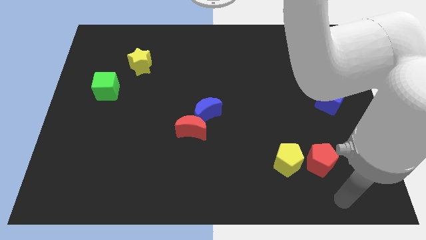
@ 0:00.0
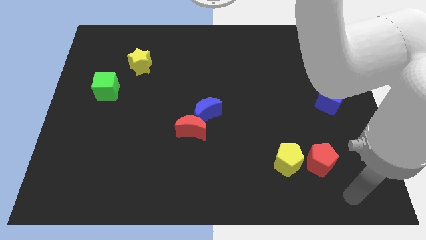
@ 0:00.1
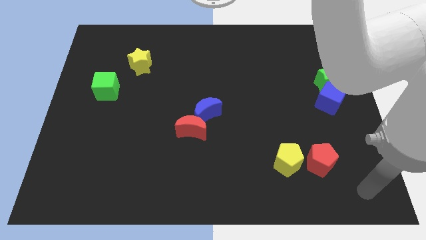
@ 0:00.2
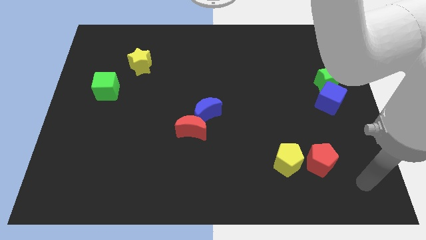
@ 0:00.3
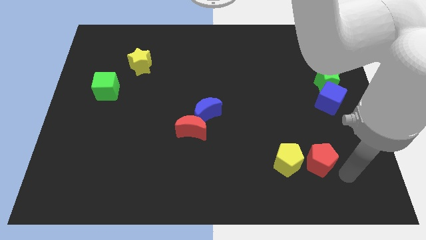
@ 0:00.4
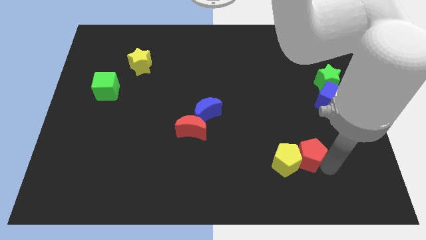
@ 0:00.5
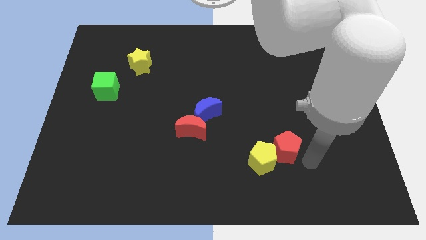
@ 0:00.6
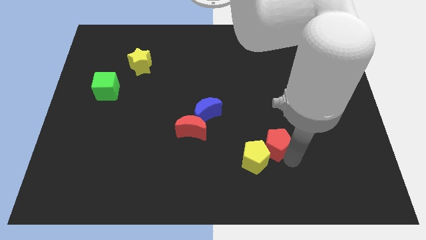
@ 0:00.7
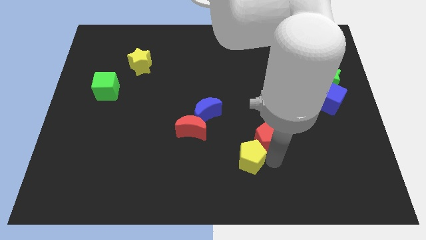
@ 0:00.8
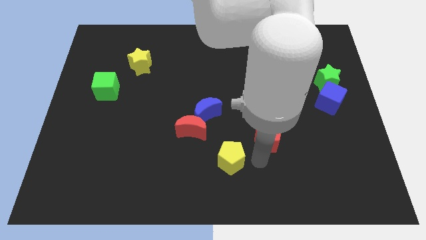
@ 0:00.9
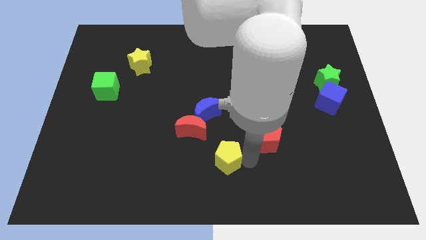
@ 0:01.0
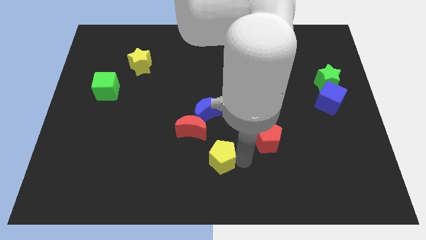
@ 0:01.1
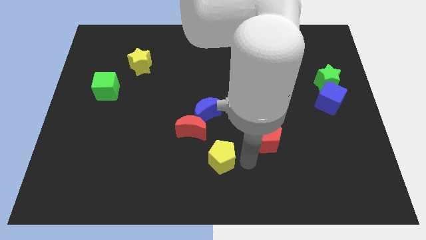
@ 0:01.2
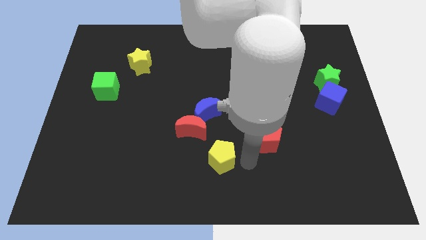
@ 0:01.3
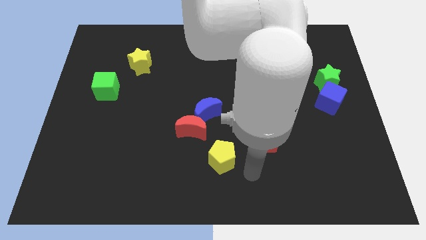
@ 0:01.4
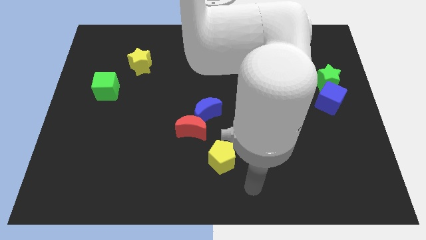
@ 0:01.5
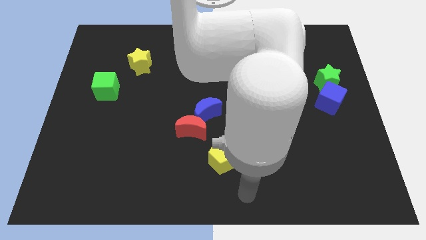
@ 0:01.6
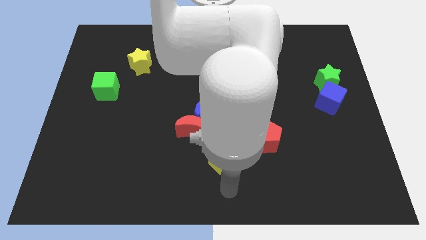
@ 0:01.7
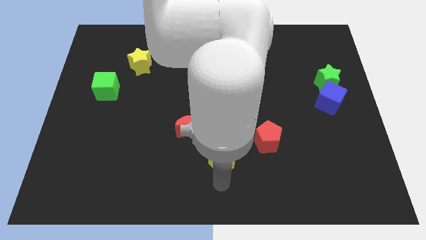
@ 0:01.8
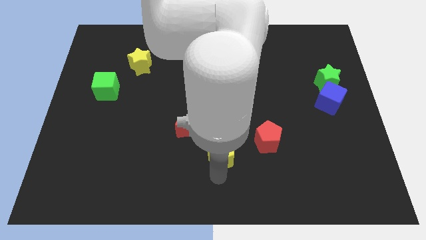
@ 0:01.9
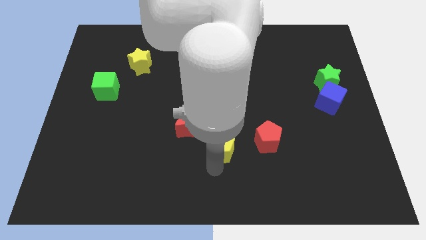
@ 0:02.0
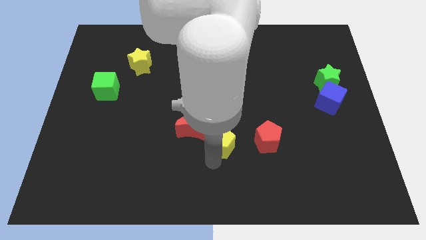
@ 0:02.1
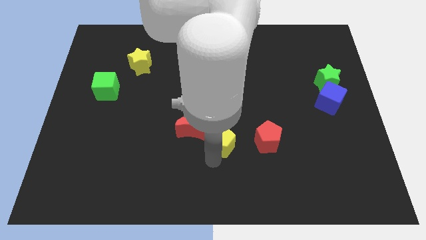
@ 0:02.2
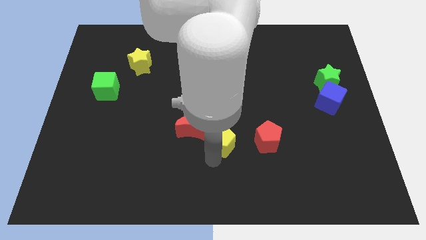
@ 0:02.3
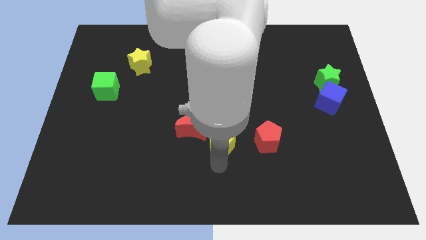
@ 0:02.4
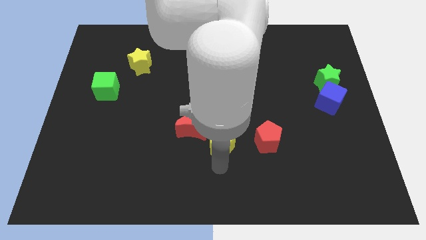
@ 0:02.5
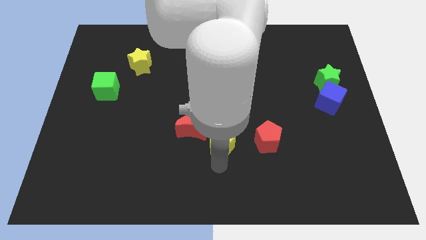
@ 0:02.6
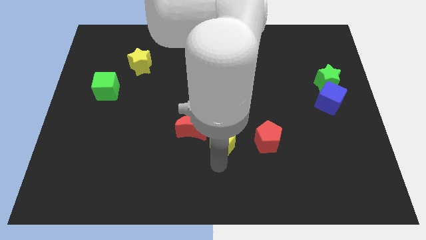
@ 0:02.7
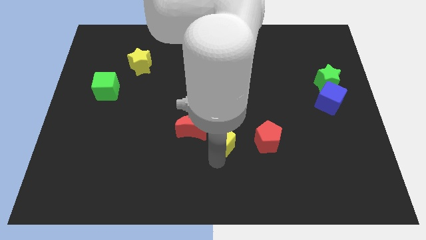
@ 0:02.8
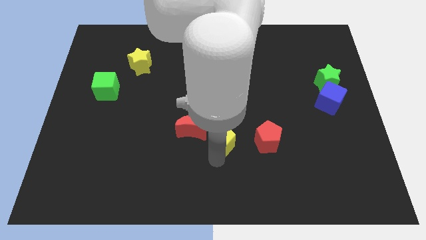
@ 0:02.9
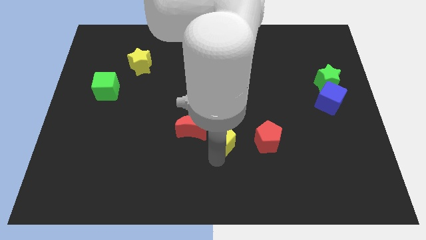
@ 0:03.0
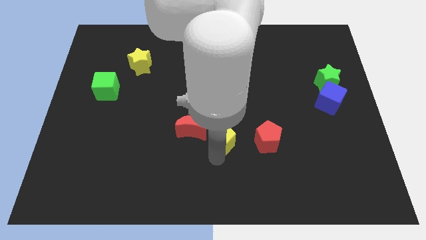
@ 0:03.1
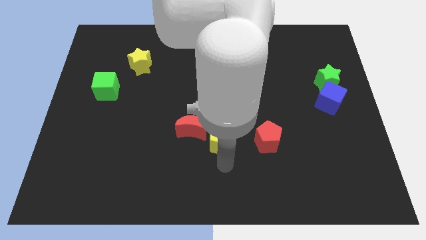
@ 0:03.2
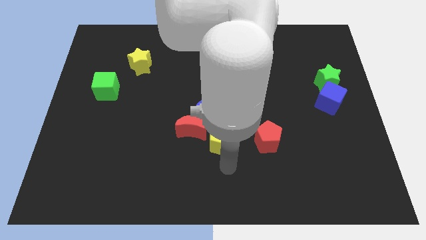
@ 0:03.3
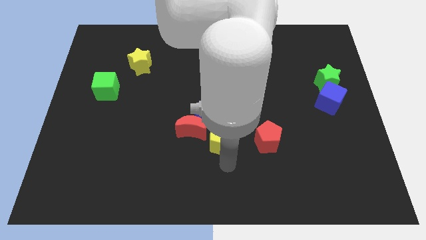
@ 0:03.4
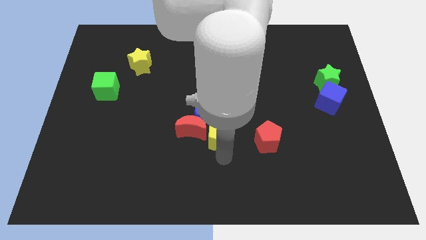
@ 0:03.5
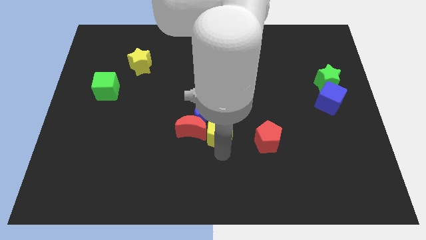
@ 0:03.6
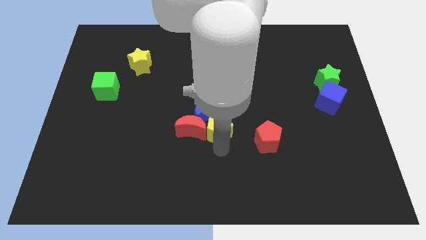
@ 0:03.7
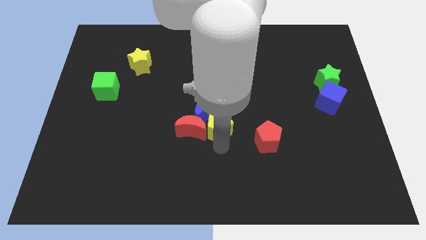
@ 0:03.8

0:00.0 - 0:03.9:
move yellow pentagon right beside the red moon

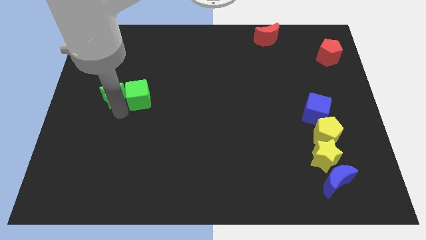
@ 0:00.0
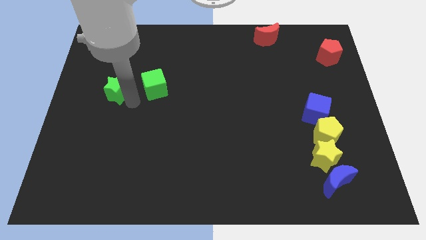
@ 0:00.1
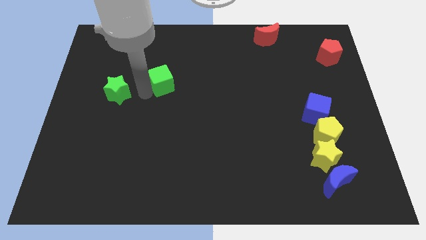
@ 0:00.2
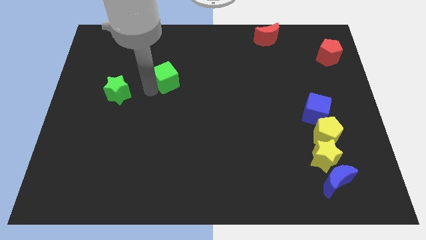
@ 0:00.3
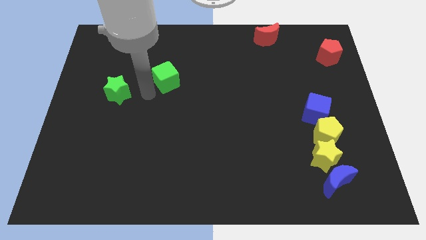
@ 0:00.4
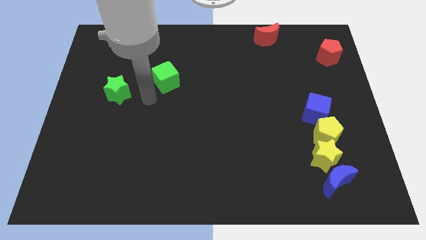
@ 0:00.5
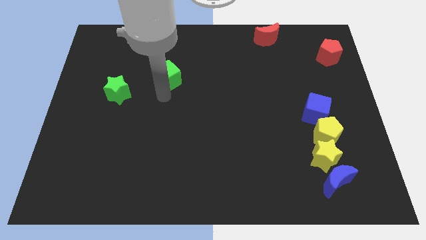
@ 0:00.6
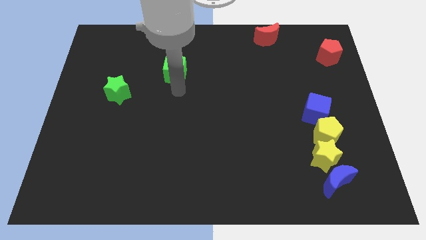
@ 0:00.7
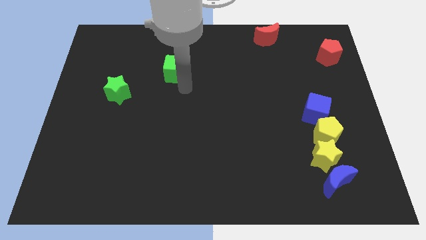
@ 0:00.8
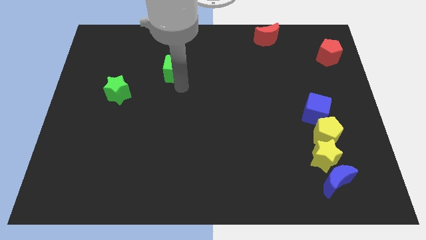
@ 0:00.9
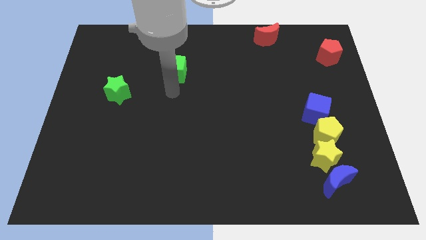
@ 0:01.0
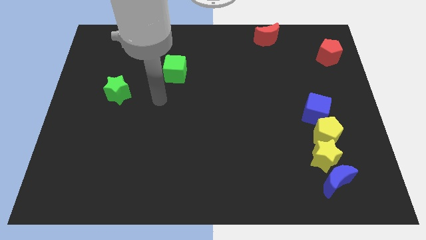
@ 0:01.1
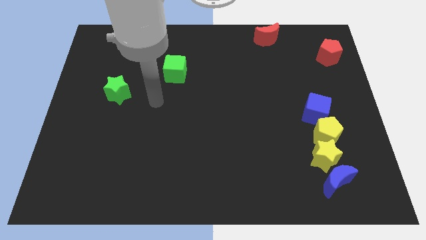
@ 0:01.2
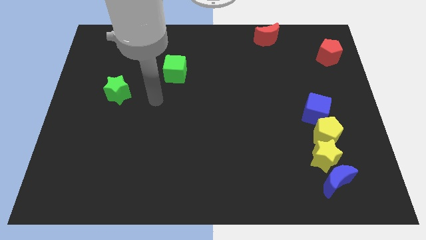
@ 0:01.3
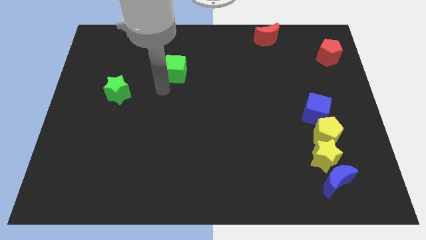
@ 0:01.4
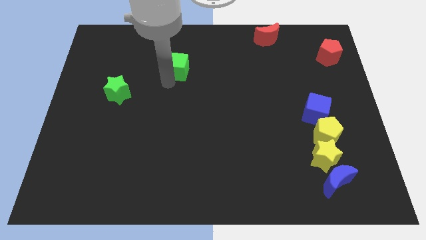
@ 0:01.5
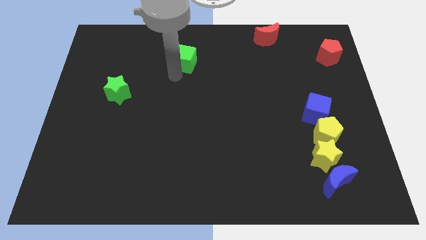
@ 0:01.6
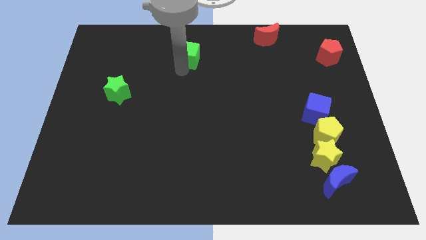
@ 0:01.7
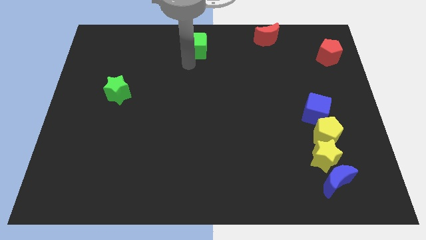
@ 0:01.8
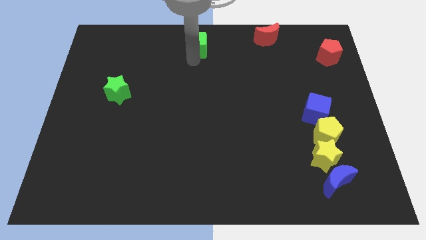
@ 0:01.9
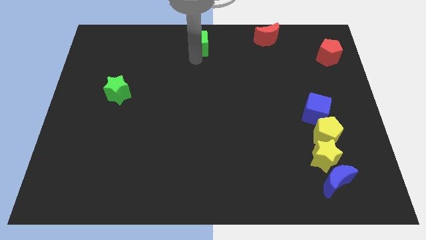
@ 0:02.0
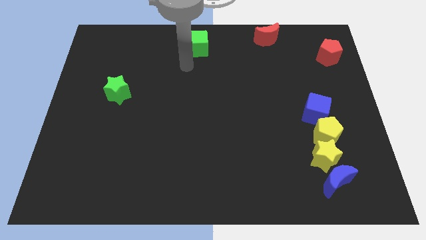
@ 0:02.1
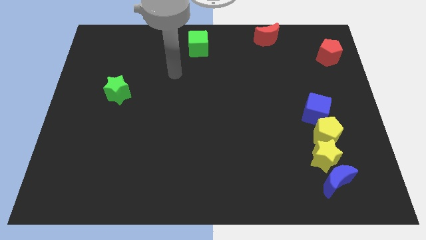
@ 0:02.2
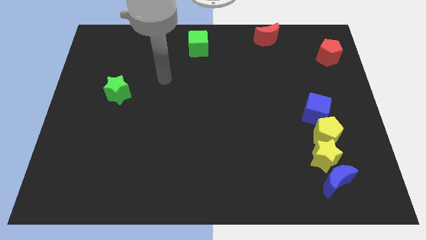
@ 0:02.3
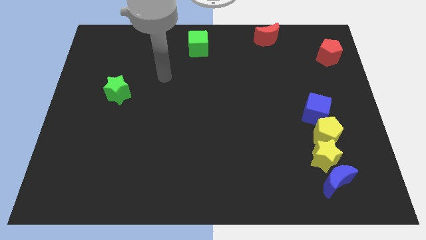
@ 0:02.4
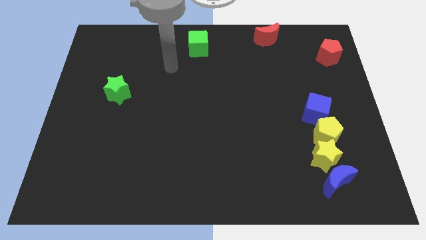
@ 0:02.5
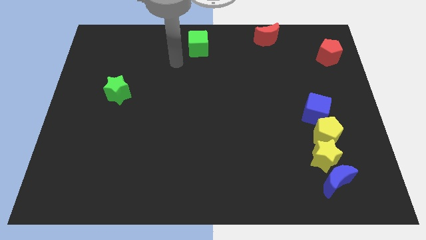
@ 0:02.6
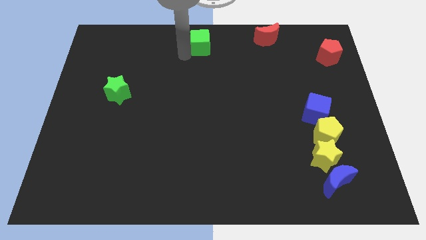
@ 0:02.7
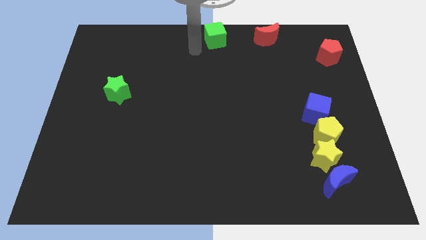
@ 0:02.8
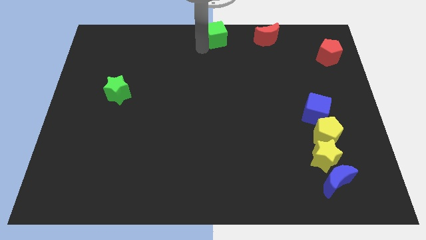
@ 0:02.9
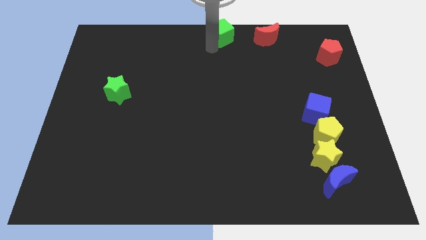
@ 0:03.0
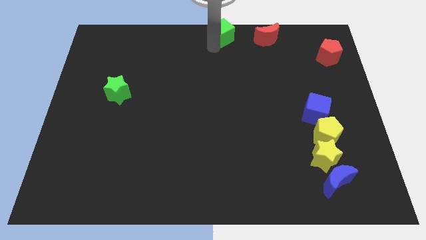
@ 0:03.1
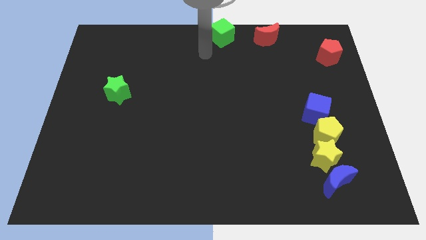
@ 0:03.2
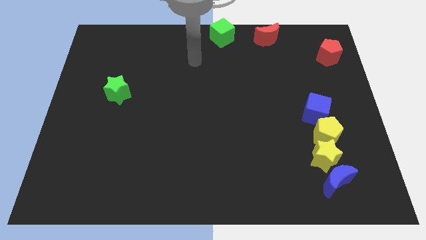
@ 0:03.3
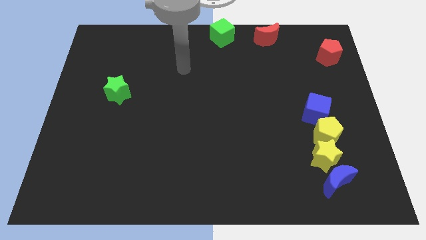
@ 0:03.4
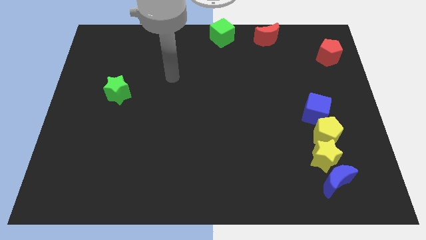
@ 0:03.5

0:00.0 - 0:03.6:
move the green cube to the left of the red crescent

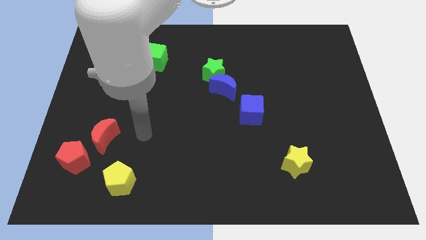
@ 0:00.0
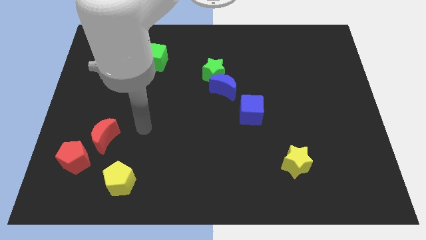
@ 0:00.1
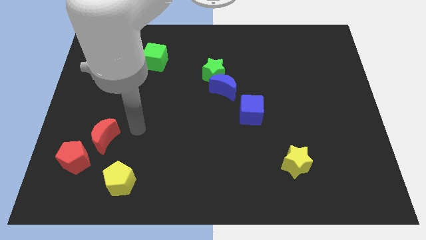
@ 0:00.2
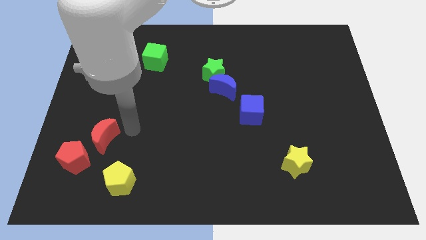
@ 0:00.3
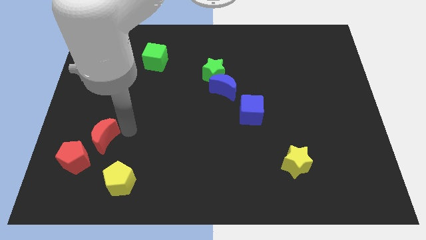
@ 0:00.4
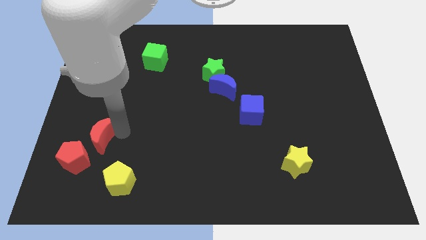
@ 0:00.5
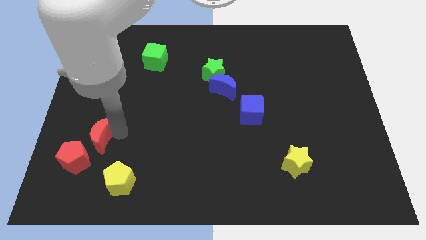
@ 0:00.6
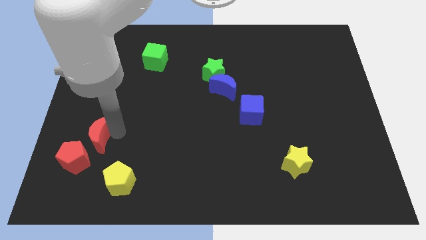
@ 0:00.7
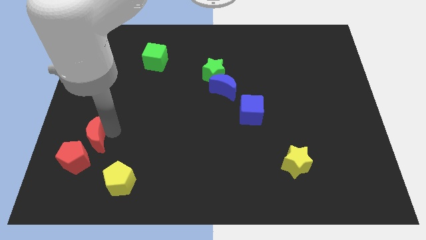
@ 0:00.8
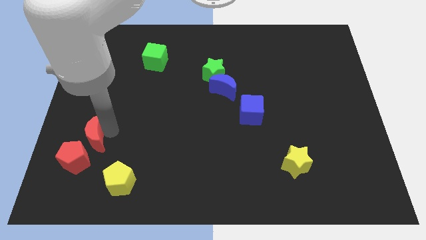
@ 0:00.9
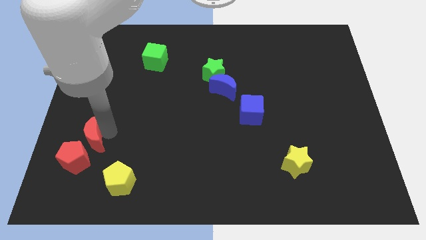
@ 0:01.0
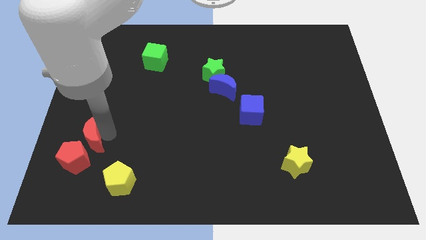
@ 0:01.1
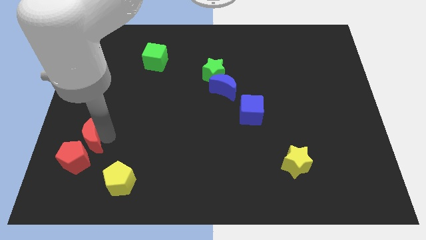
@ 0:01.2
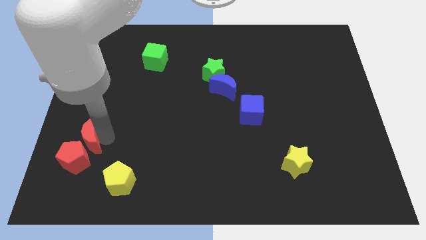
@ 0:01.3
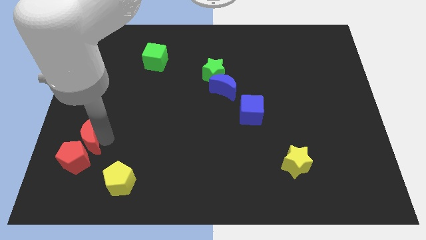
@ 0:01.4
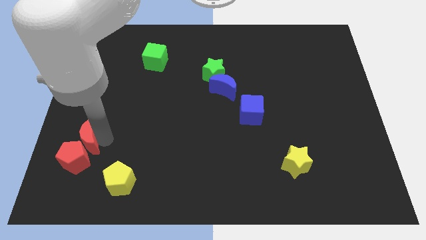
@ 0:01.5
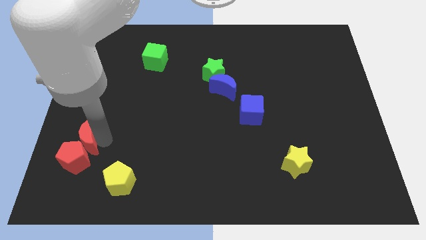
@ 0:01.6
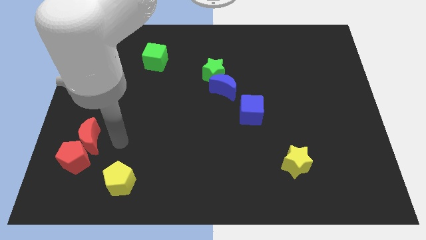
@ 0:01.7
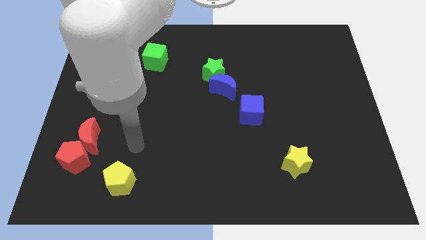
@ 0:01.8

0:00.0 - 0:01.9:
push the red crescent close to the red pentagon
